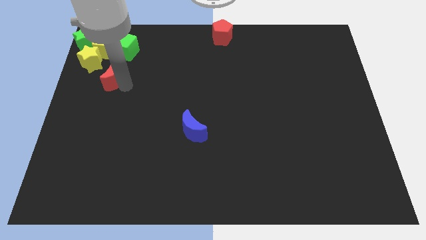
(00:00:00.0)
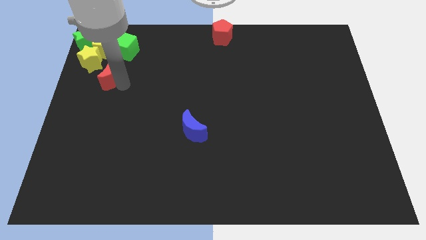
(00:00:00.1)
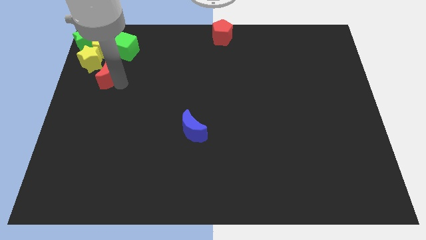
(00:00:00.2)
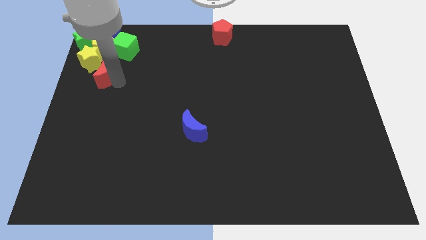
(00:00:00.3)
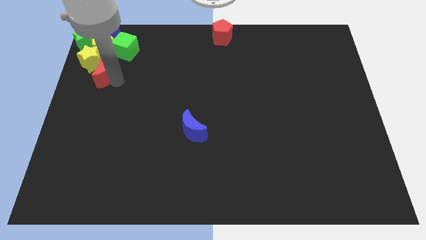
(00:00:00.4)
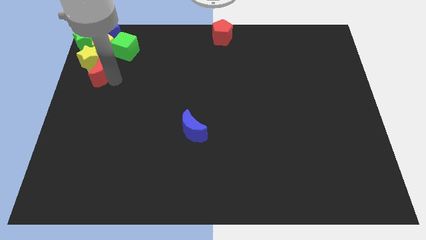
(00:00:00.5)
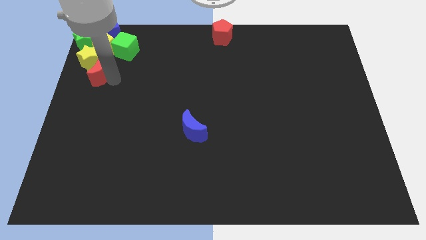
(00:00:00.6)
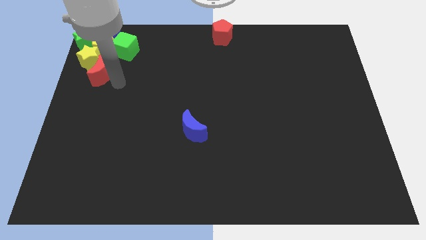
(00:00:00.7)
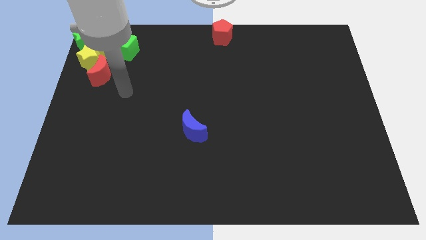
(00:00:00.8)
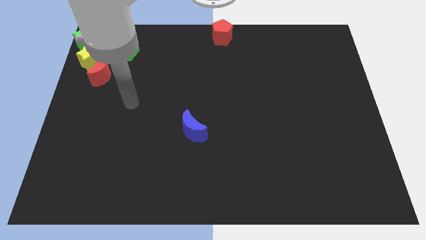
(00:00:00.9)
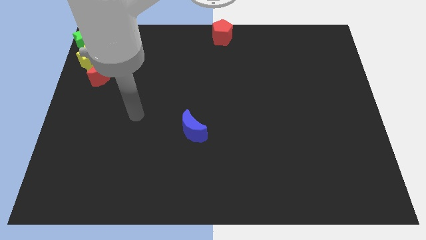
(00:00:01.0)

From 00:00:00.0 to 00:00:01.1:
move the red crescent into the yellow star

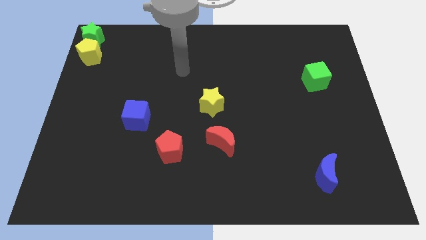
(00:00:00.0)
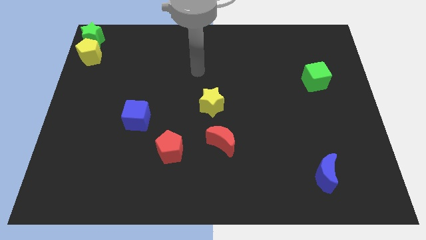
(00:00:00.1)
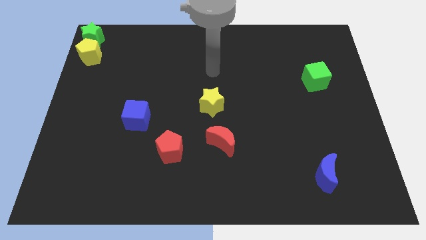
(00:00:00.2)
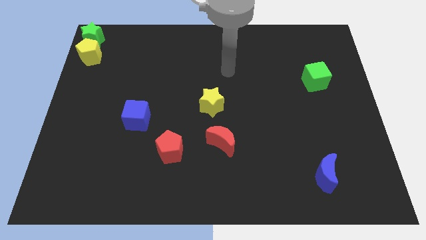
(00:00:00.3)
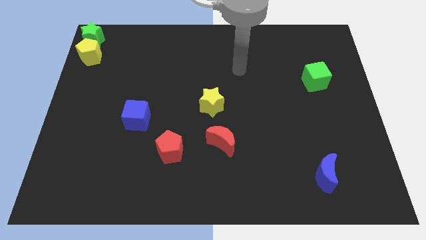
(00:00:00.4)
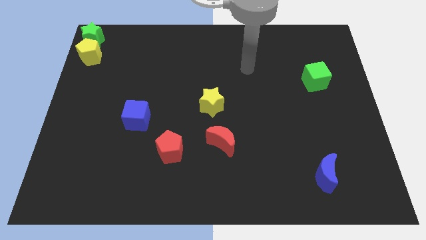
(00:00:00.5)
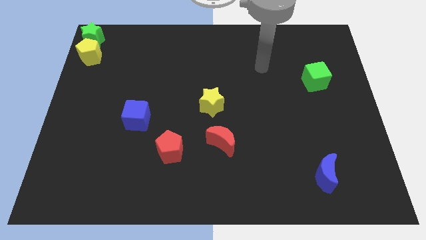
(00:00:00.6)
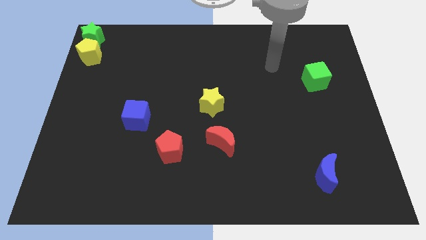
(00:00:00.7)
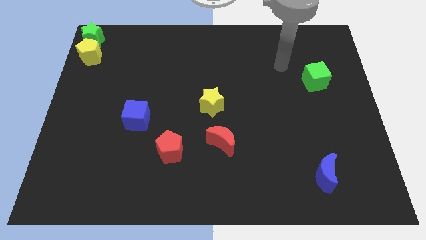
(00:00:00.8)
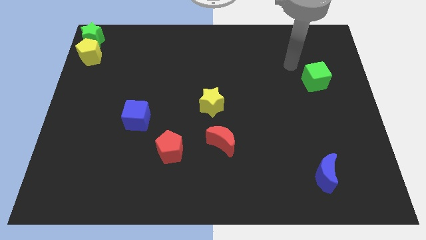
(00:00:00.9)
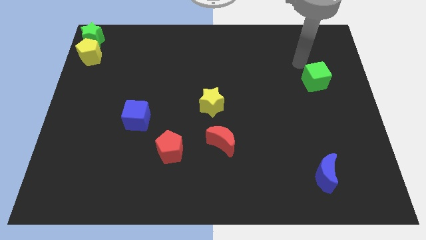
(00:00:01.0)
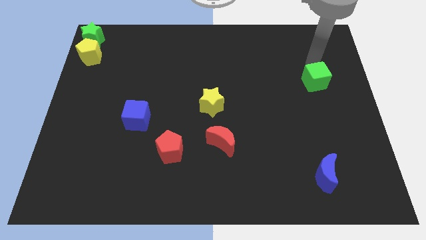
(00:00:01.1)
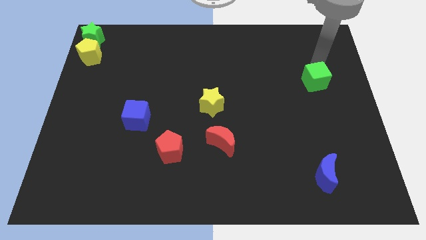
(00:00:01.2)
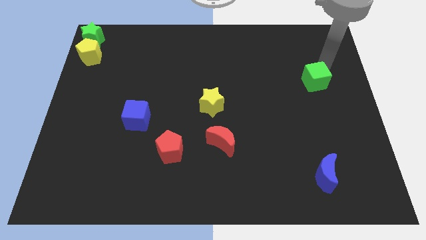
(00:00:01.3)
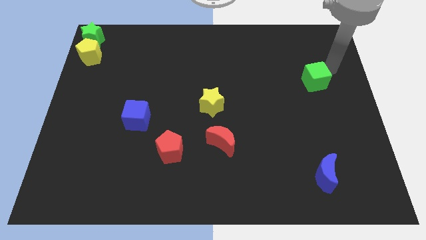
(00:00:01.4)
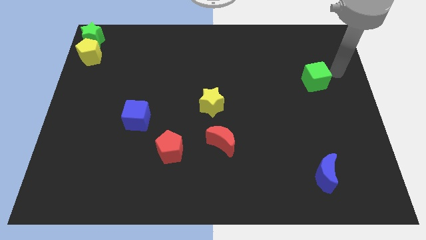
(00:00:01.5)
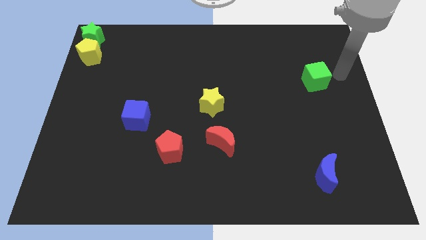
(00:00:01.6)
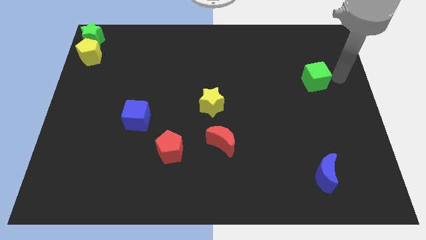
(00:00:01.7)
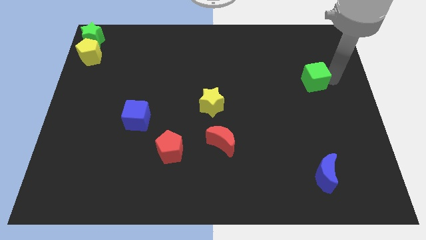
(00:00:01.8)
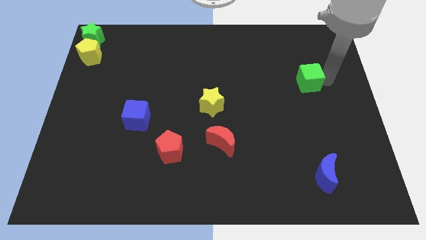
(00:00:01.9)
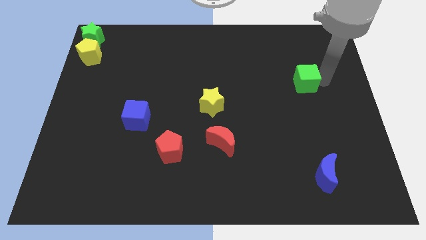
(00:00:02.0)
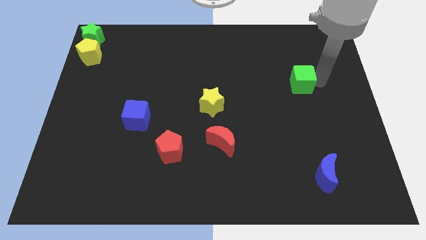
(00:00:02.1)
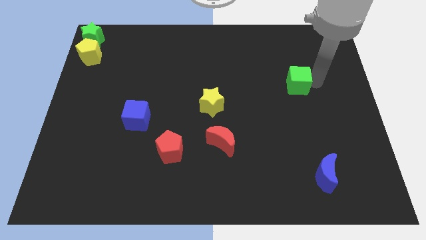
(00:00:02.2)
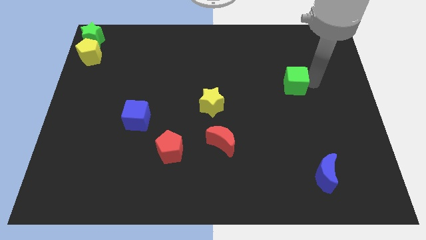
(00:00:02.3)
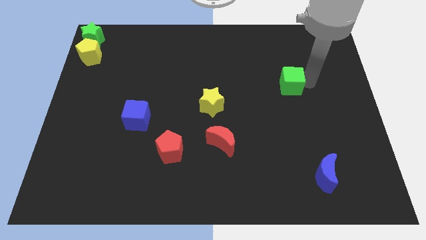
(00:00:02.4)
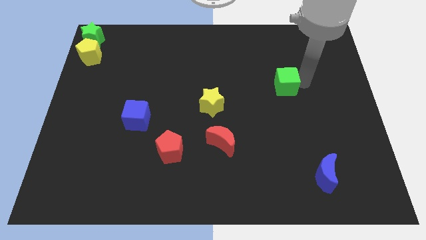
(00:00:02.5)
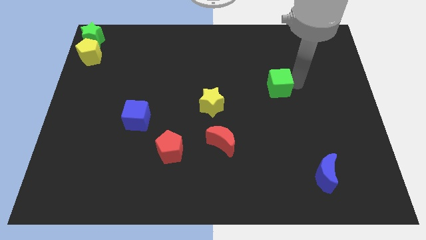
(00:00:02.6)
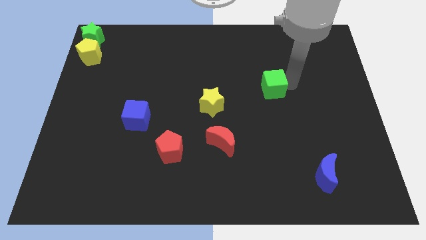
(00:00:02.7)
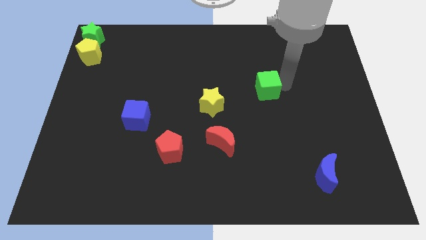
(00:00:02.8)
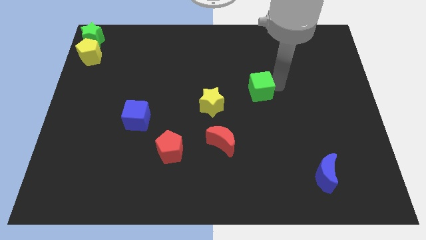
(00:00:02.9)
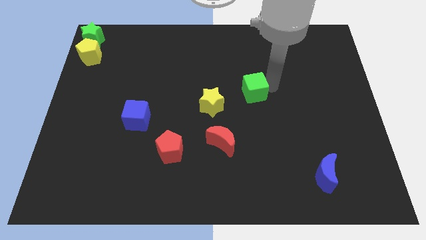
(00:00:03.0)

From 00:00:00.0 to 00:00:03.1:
move green cube towards yellow star

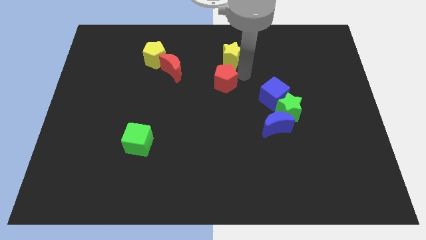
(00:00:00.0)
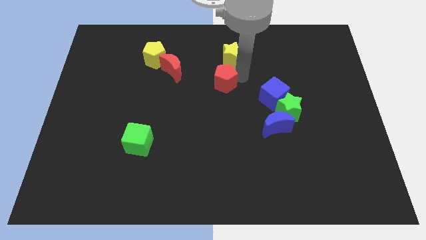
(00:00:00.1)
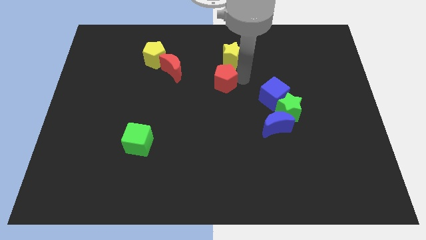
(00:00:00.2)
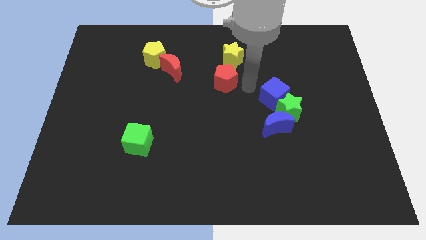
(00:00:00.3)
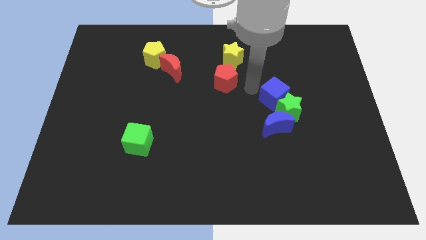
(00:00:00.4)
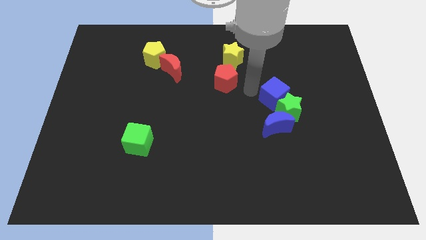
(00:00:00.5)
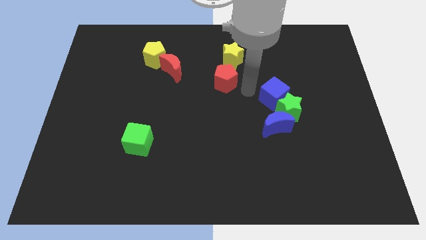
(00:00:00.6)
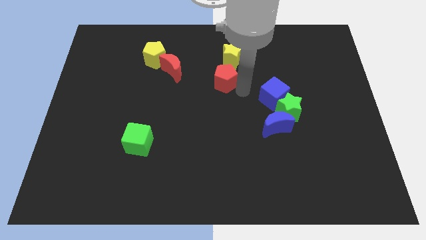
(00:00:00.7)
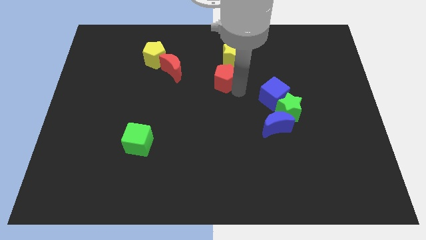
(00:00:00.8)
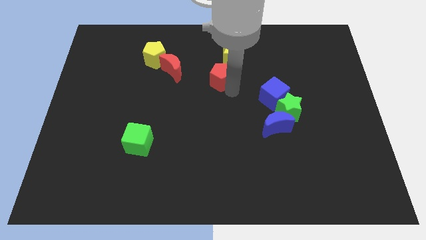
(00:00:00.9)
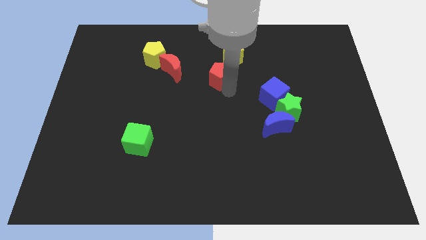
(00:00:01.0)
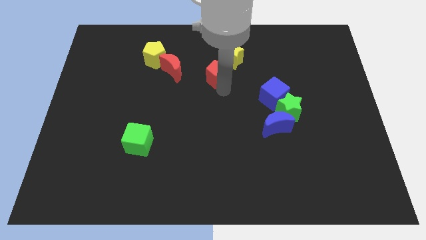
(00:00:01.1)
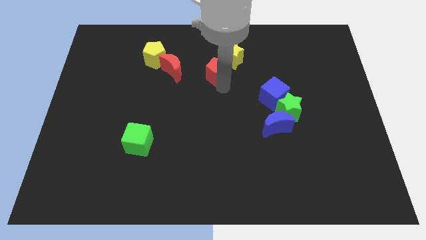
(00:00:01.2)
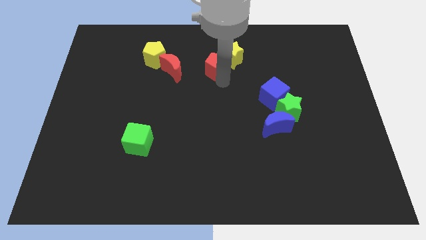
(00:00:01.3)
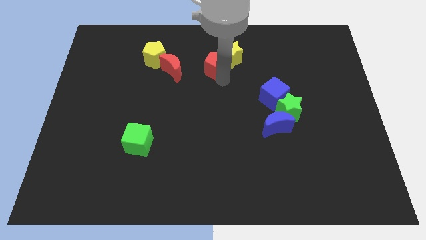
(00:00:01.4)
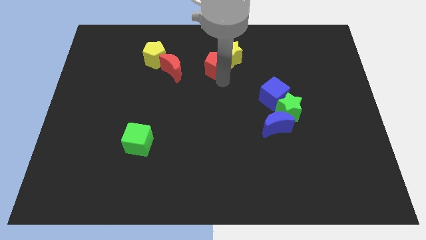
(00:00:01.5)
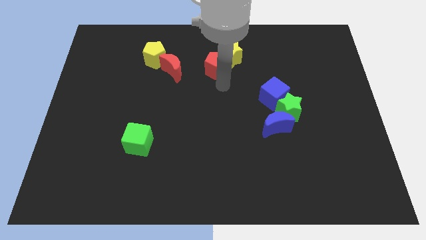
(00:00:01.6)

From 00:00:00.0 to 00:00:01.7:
slightly push the red pentagon into the bottom side of the yellow star

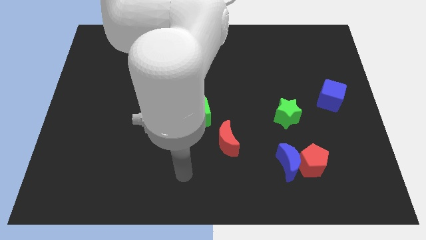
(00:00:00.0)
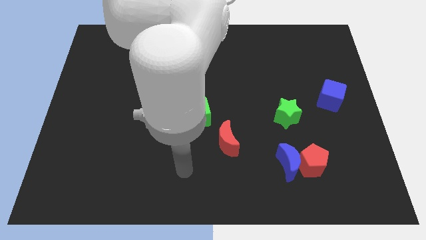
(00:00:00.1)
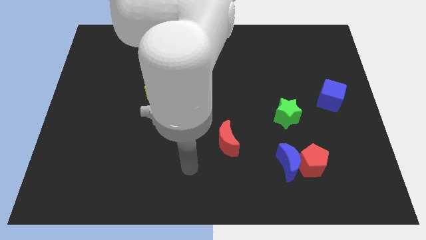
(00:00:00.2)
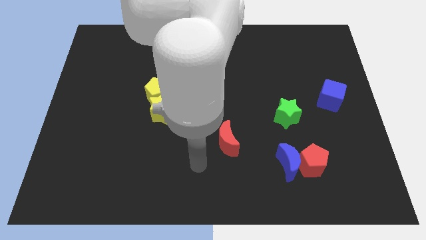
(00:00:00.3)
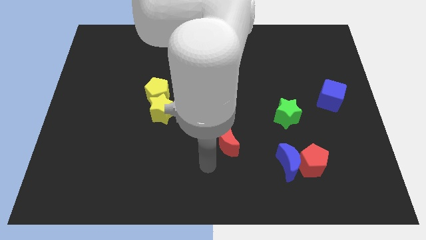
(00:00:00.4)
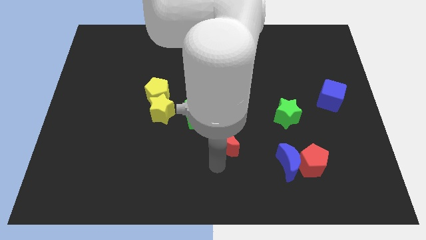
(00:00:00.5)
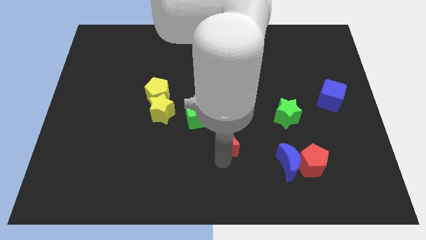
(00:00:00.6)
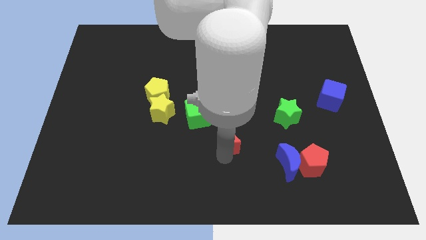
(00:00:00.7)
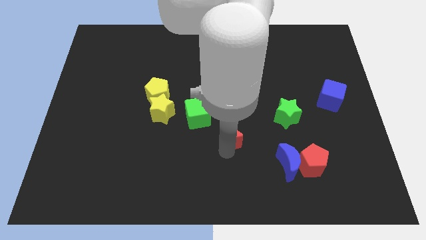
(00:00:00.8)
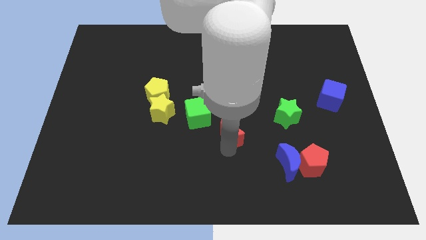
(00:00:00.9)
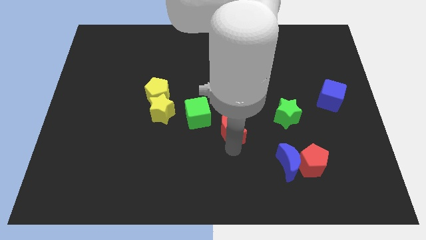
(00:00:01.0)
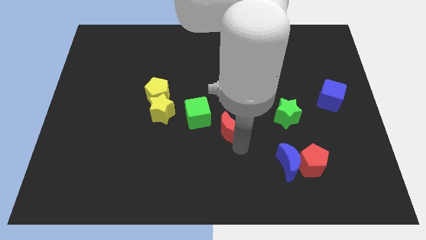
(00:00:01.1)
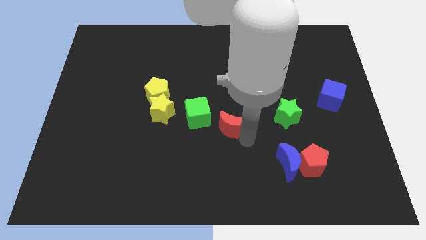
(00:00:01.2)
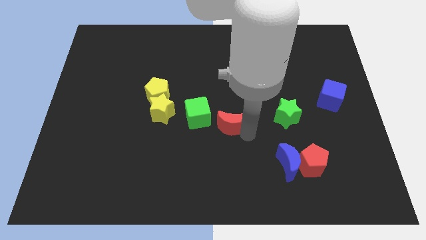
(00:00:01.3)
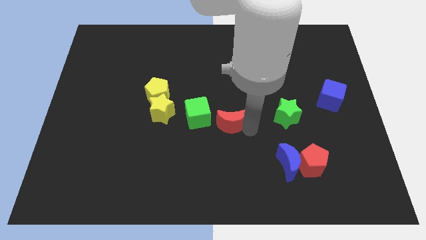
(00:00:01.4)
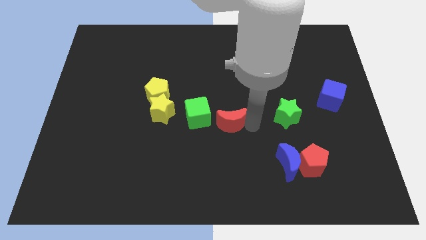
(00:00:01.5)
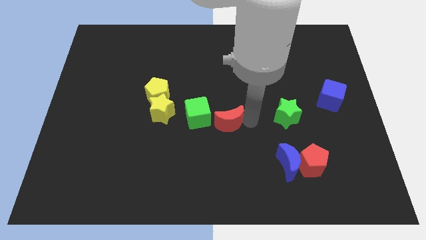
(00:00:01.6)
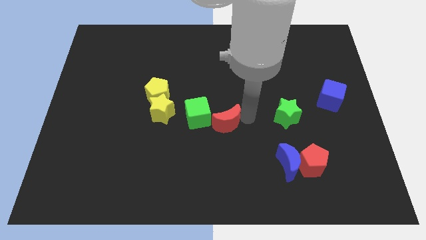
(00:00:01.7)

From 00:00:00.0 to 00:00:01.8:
place the red moon at the bottom right side of green cube

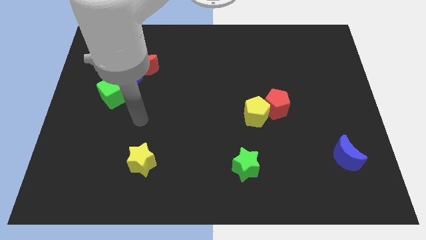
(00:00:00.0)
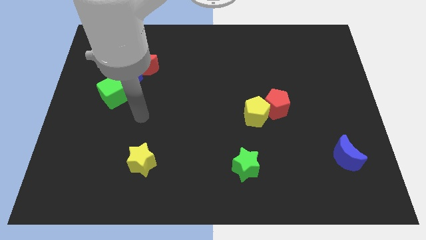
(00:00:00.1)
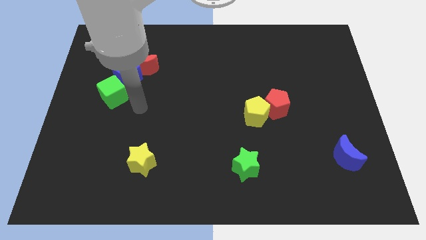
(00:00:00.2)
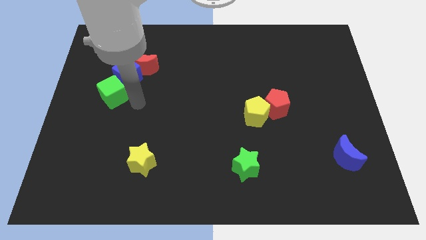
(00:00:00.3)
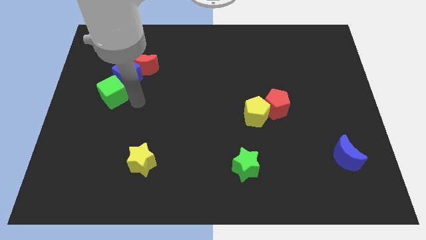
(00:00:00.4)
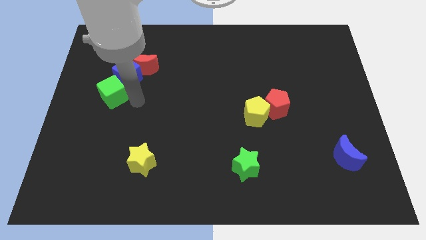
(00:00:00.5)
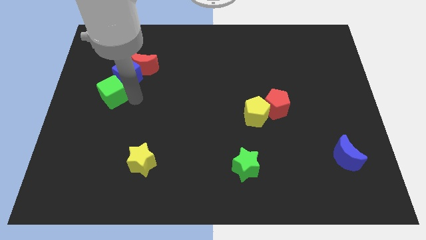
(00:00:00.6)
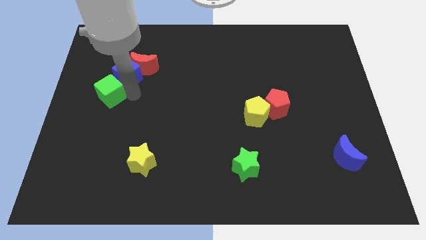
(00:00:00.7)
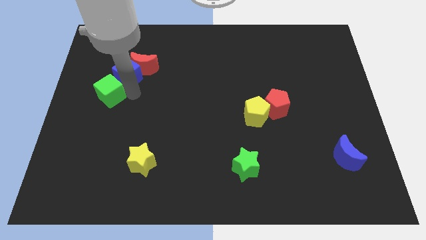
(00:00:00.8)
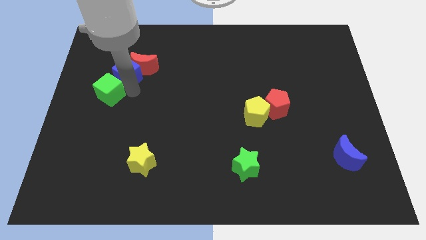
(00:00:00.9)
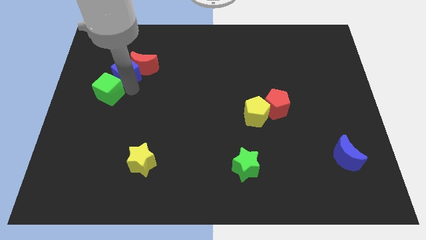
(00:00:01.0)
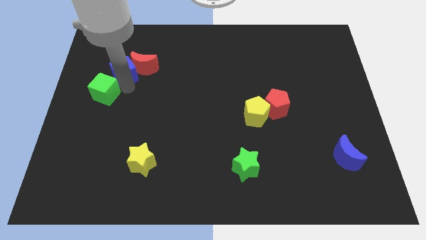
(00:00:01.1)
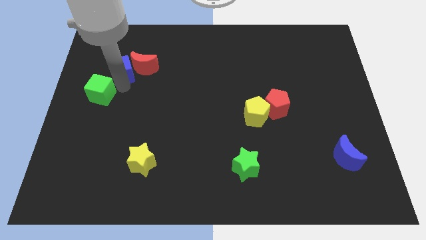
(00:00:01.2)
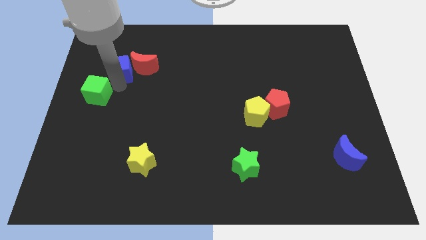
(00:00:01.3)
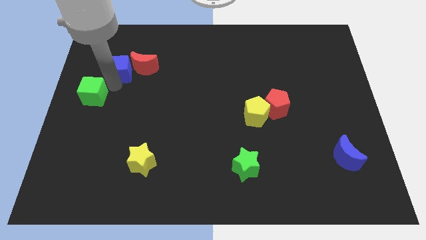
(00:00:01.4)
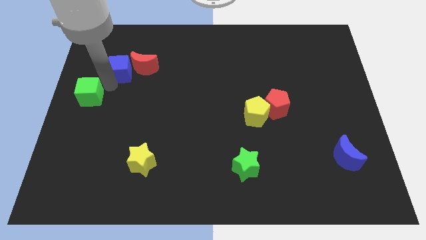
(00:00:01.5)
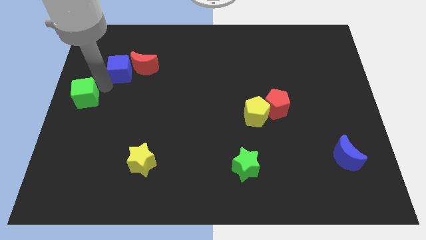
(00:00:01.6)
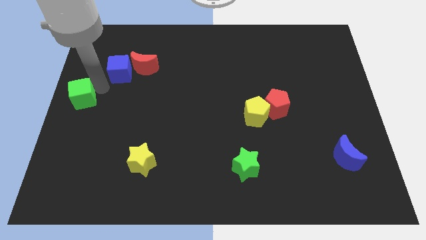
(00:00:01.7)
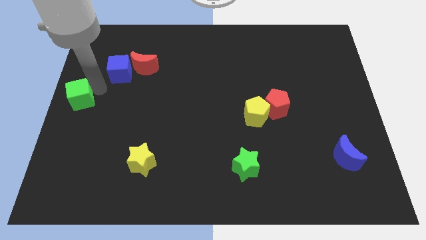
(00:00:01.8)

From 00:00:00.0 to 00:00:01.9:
slightly push the green cube to the left
